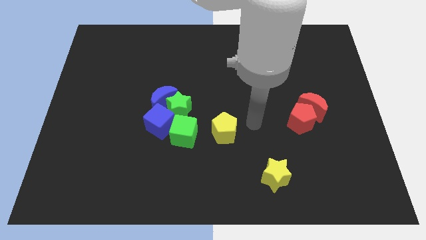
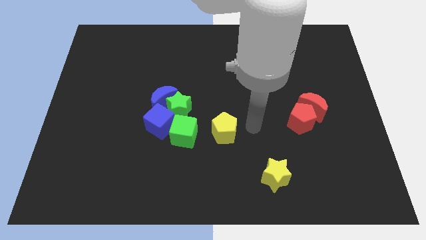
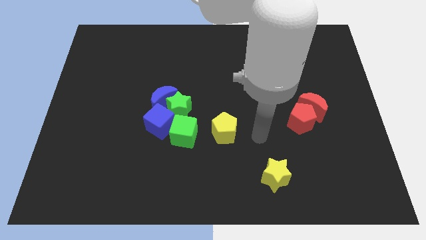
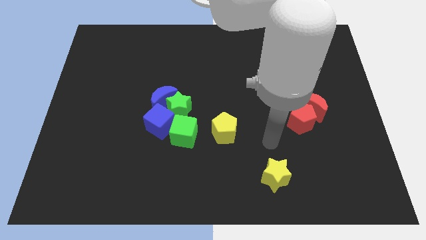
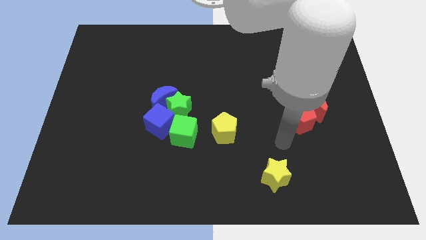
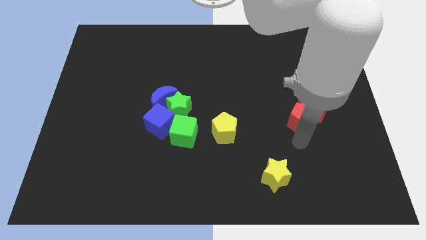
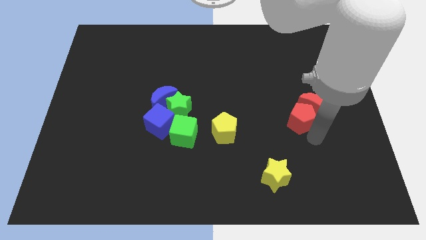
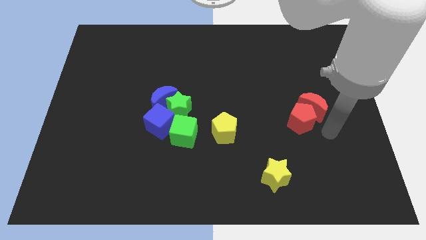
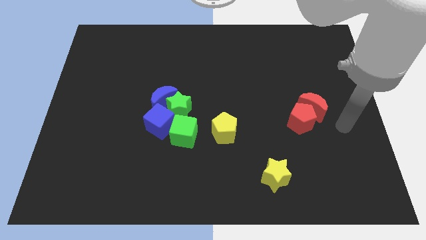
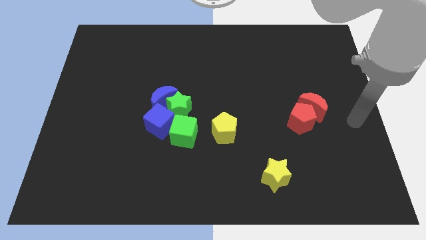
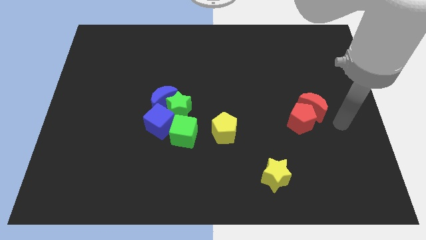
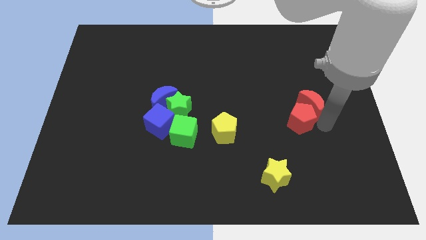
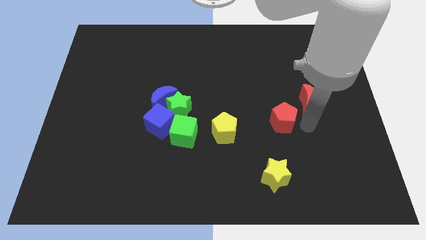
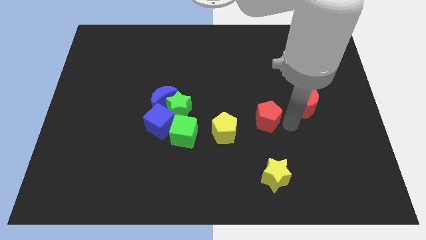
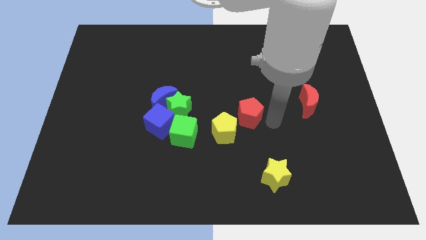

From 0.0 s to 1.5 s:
separate the red pentagon from the red moon

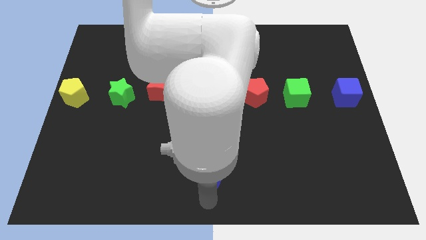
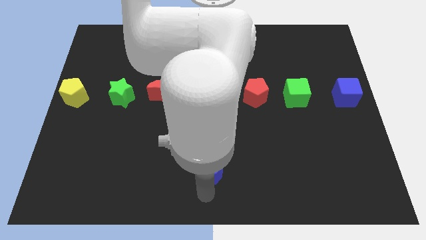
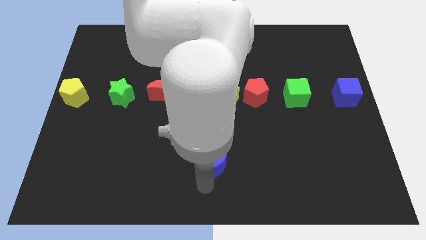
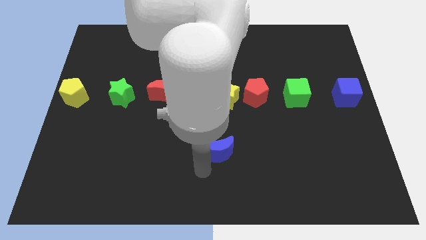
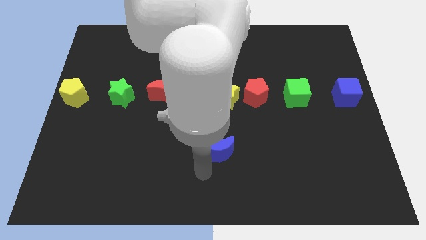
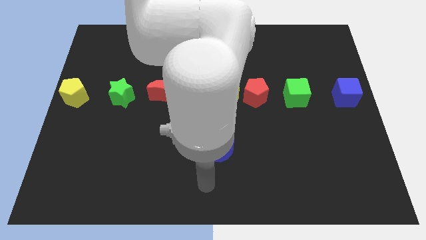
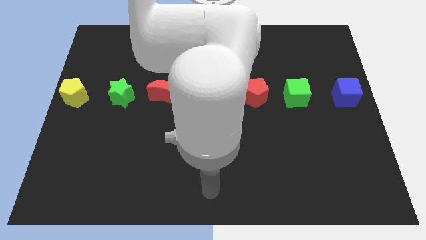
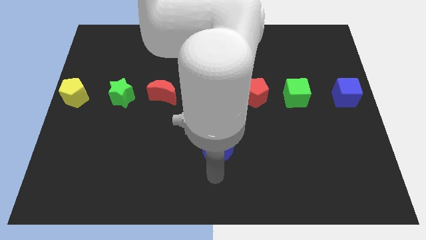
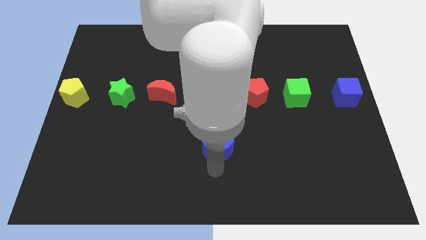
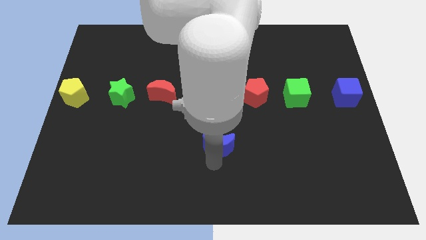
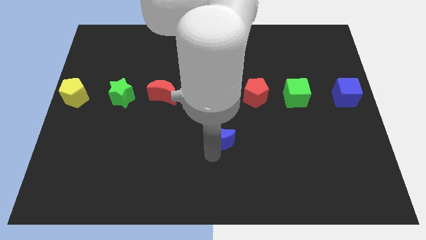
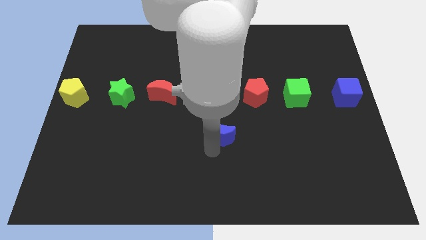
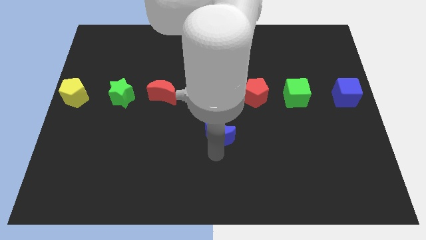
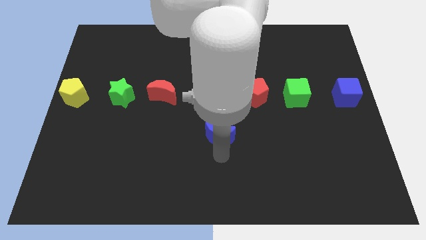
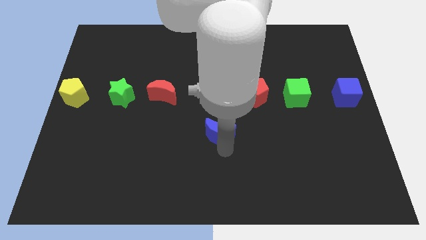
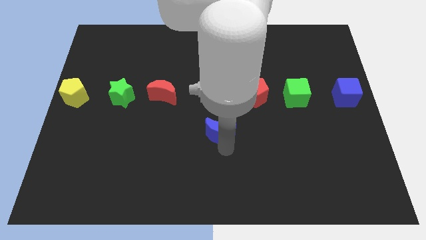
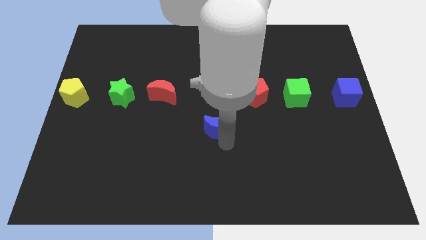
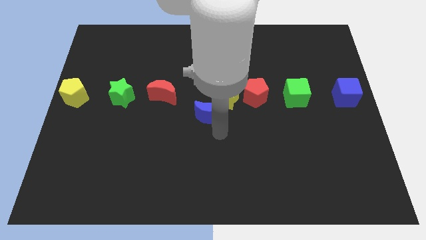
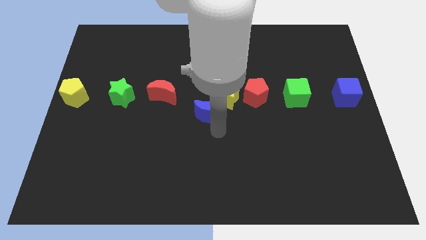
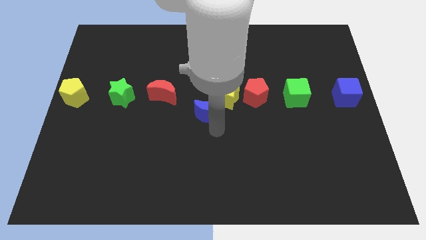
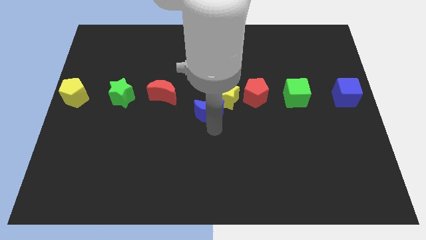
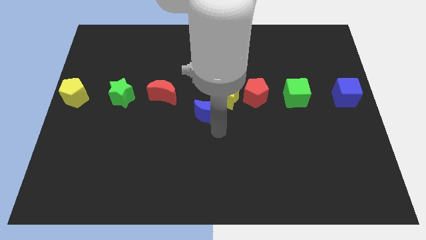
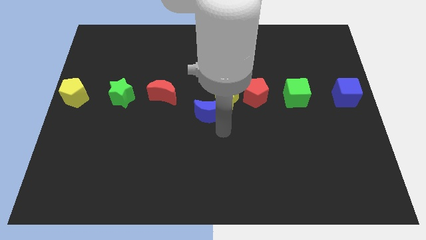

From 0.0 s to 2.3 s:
push the blue crescent diagonally left to the yellow star

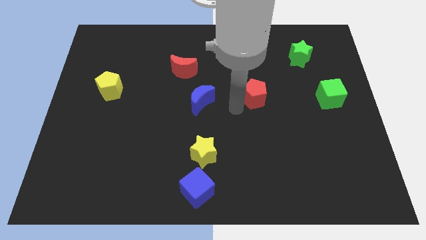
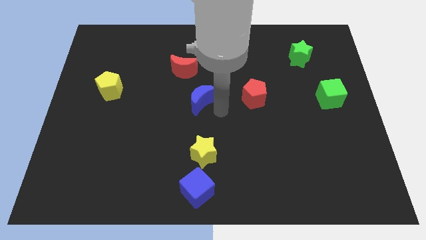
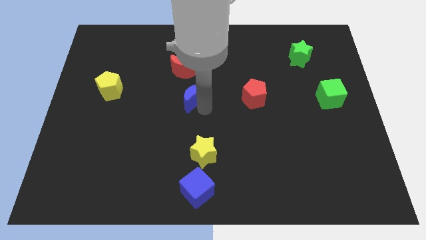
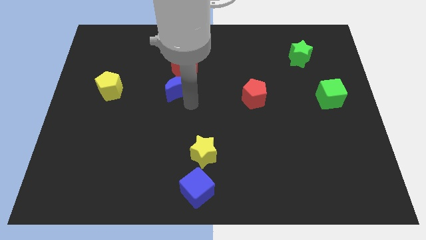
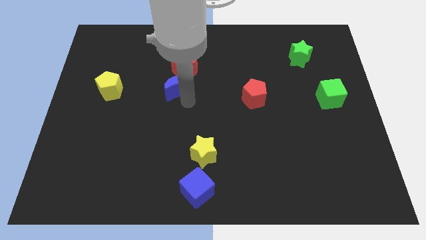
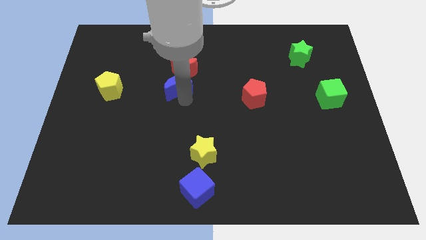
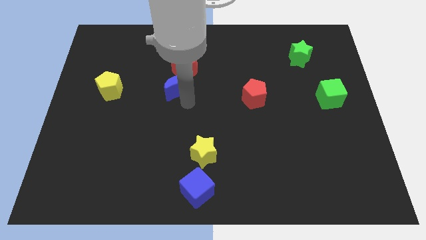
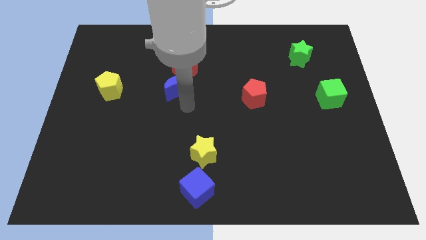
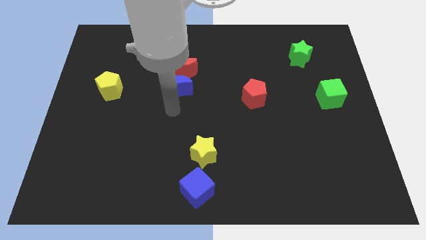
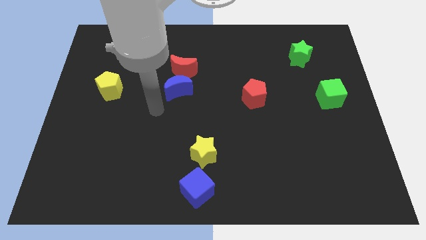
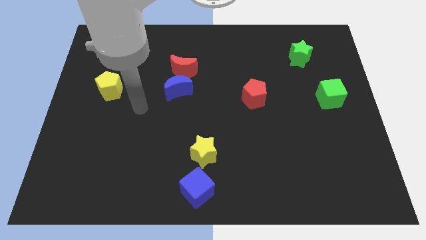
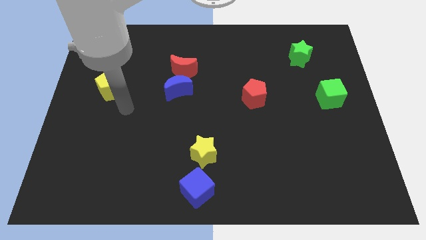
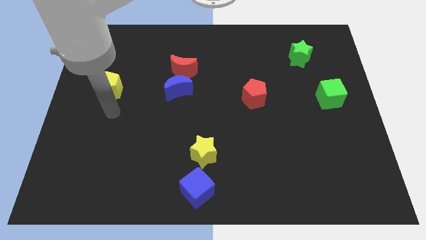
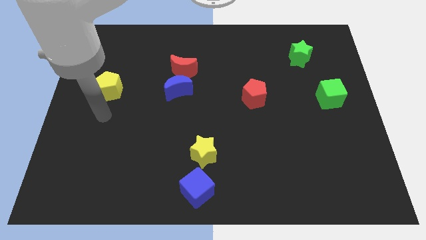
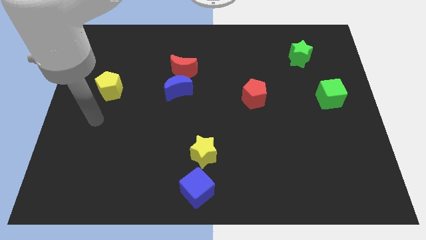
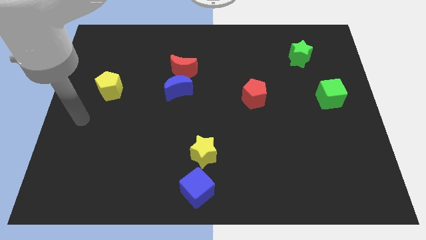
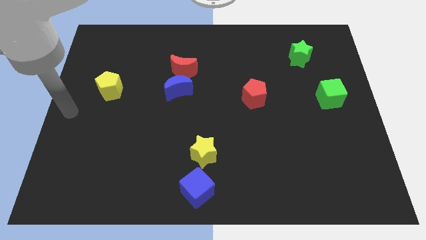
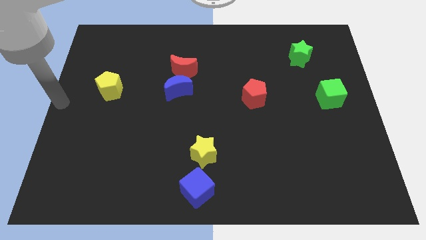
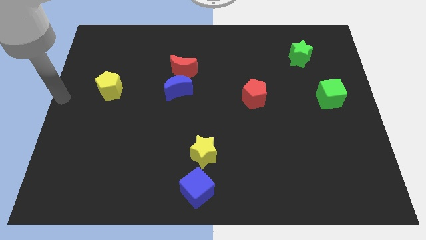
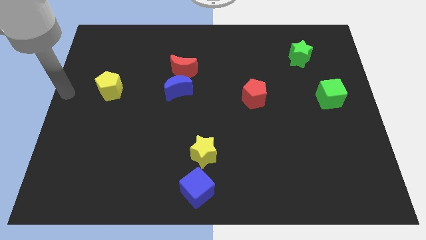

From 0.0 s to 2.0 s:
place blue moon below the red moon

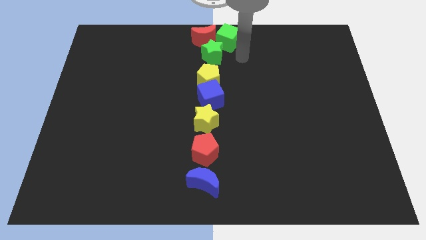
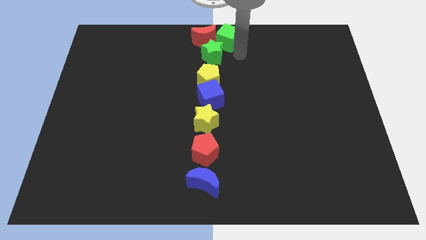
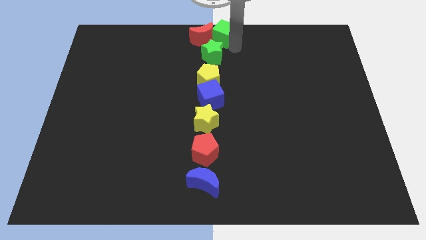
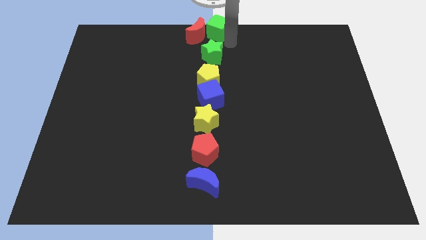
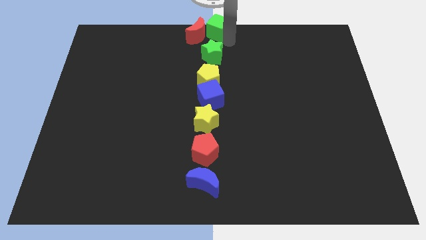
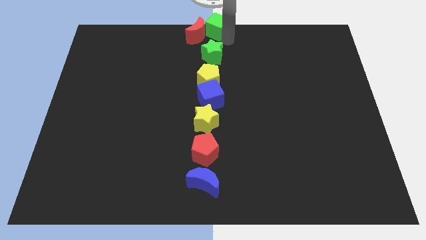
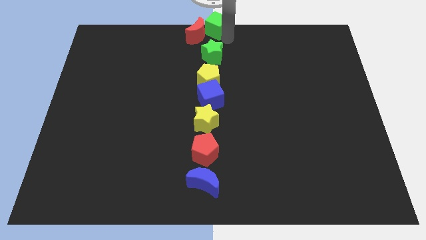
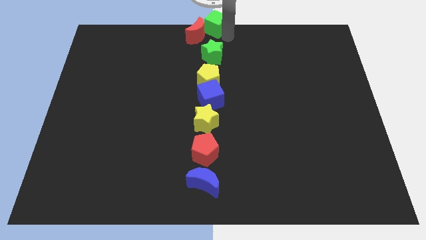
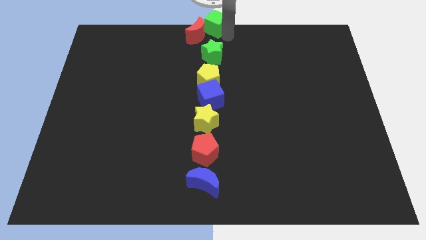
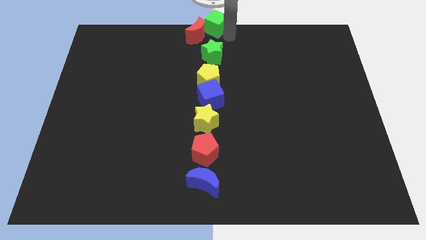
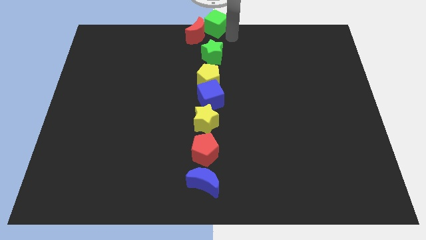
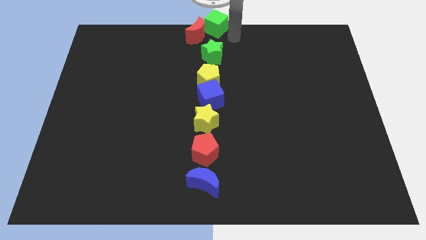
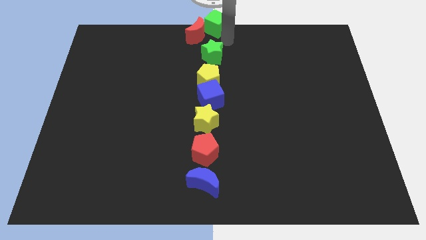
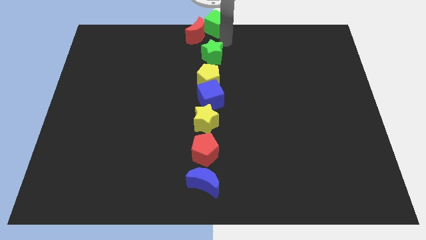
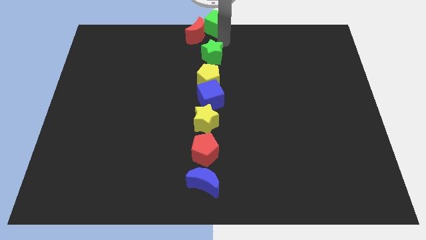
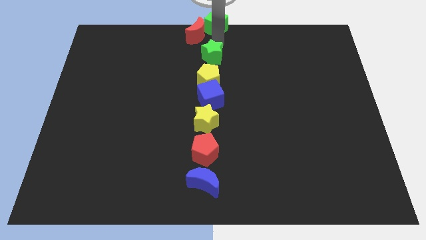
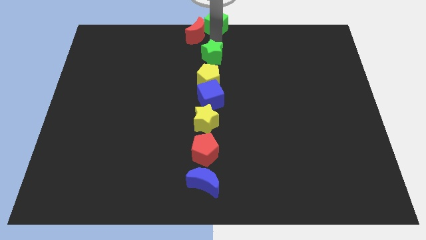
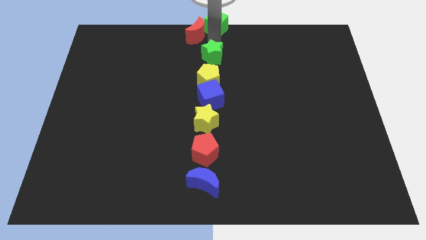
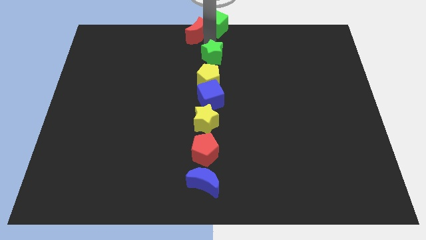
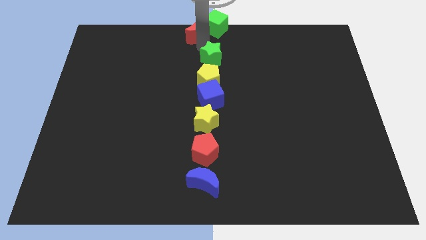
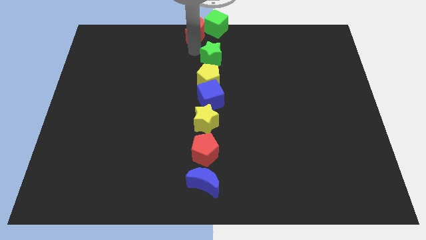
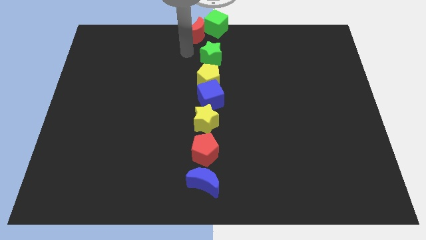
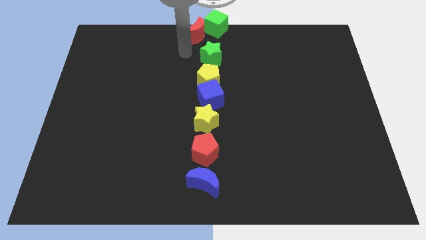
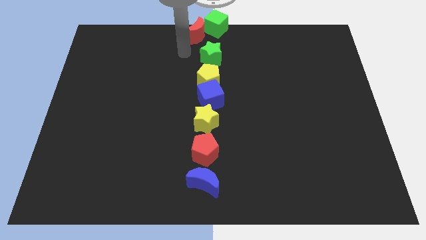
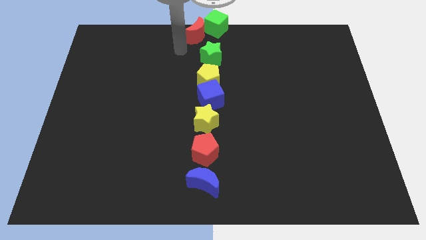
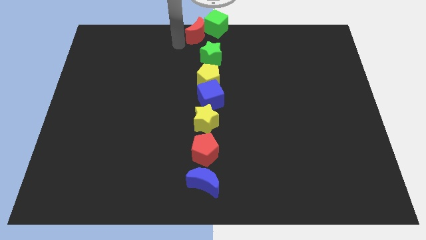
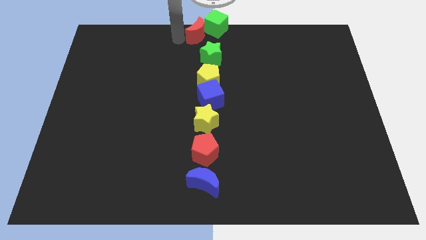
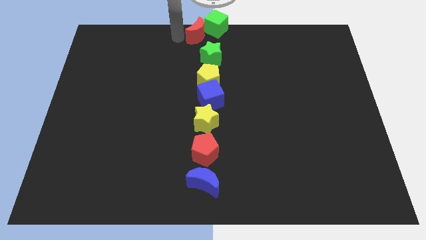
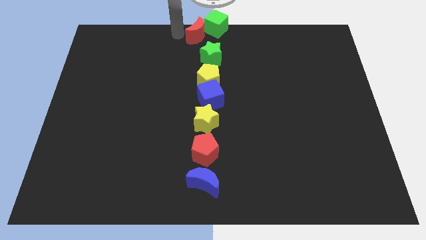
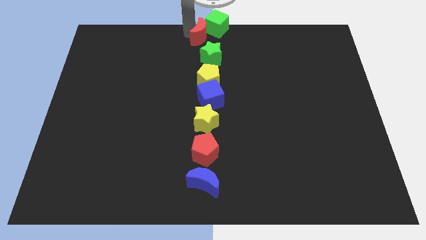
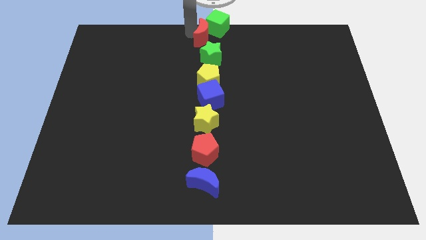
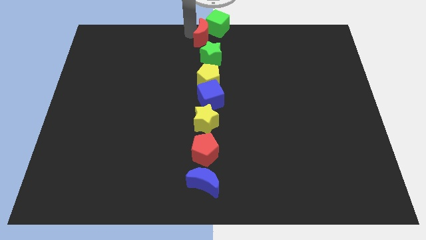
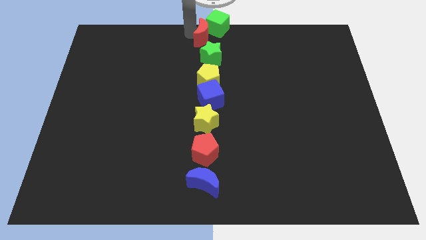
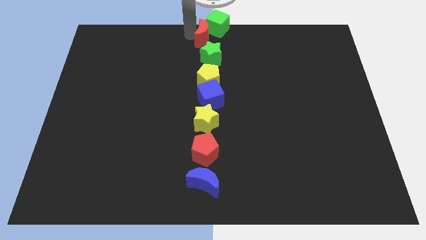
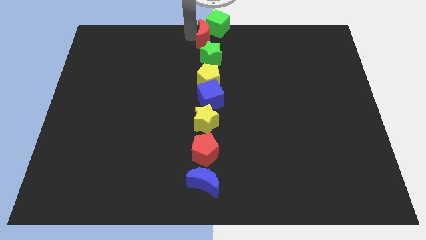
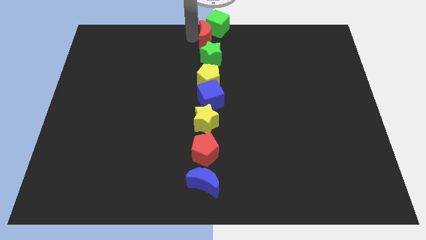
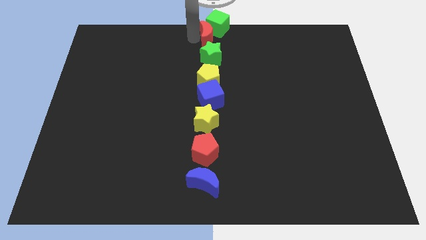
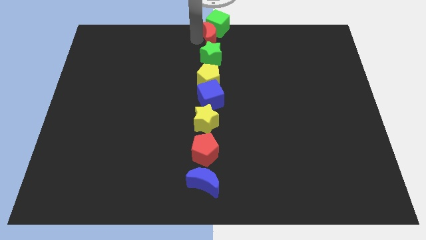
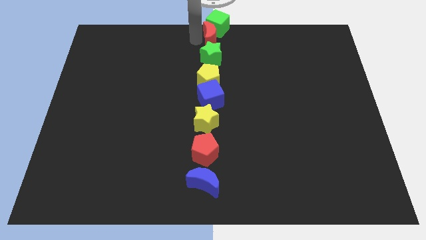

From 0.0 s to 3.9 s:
place red moon in between green cube and green star
